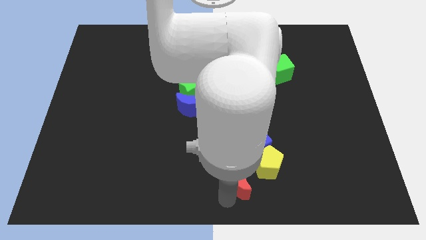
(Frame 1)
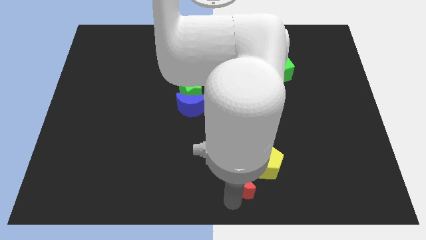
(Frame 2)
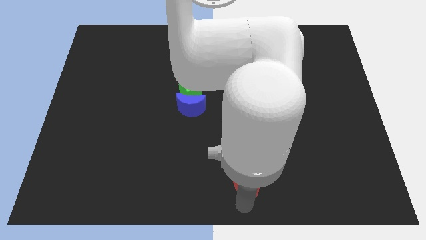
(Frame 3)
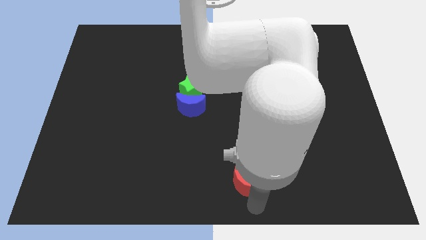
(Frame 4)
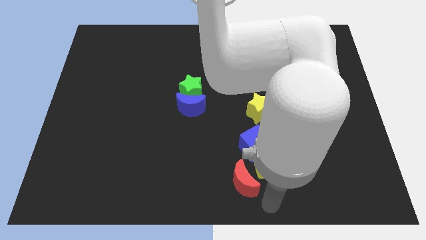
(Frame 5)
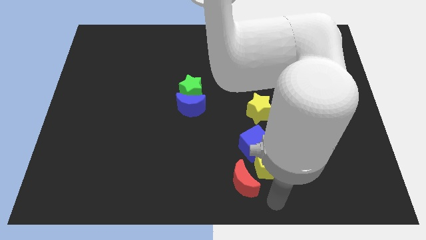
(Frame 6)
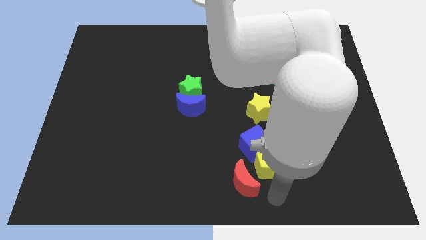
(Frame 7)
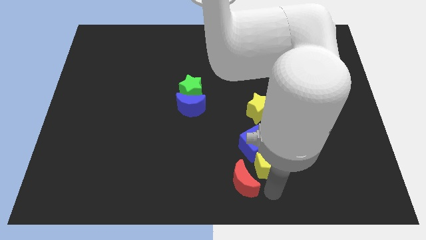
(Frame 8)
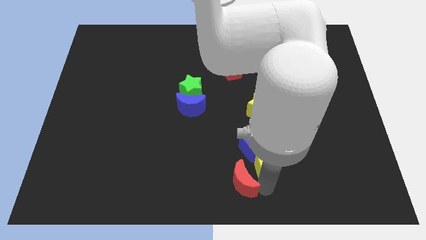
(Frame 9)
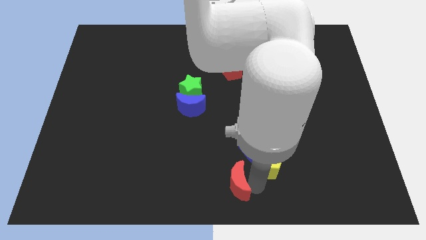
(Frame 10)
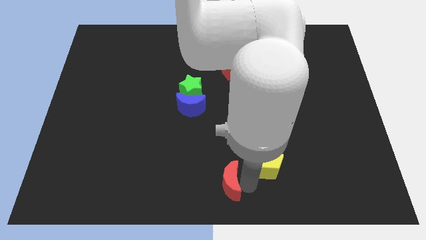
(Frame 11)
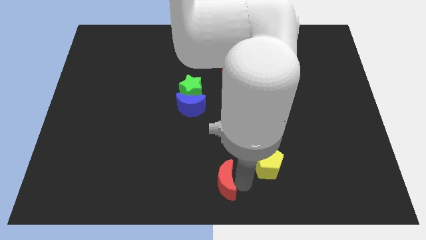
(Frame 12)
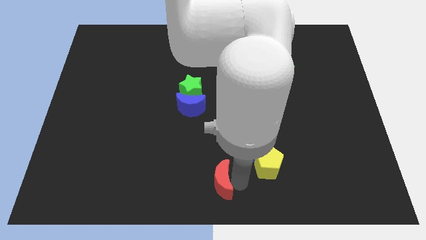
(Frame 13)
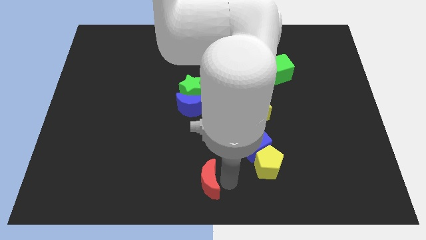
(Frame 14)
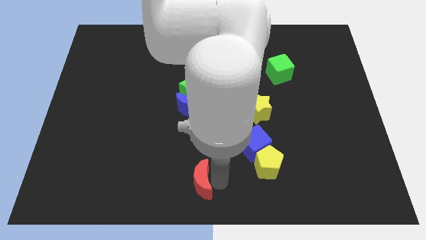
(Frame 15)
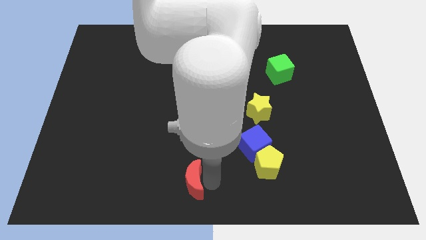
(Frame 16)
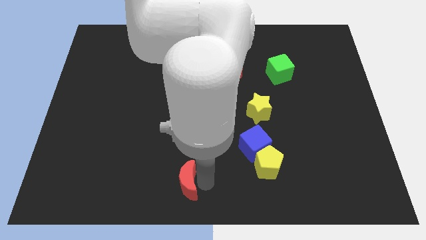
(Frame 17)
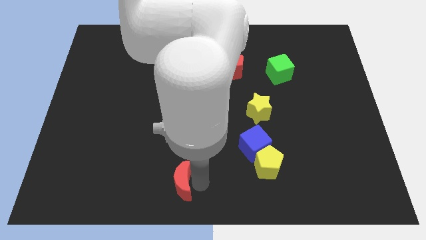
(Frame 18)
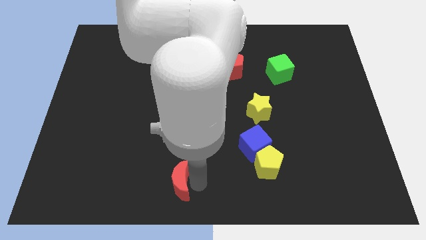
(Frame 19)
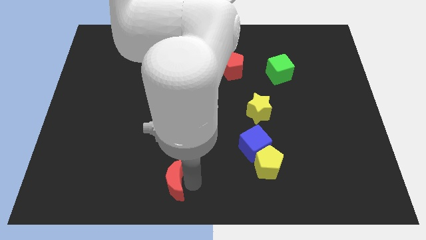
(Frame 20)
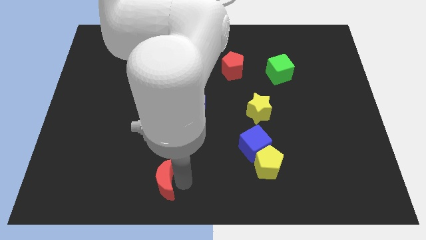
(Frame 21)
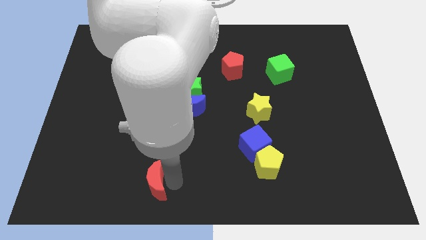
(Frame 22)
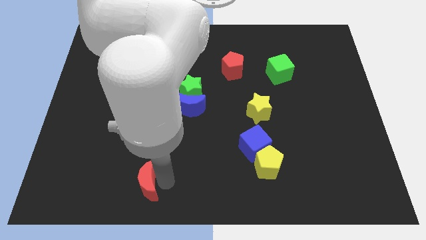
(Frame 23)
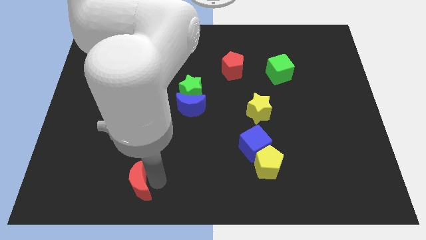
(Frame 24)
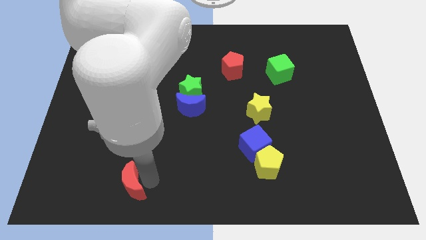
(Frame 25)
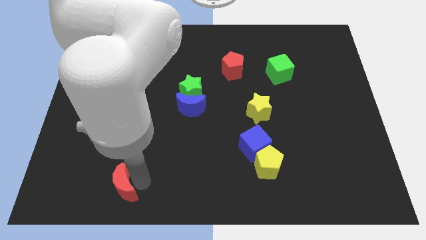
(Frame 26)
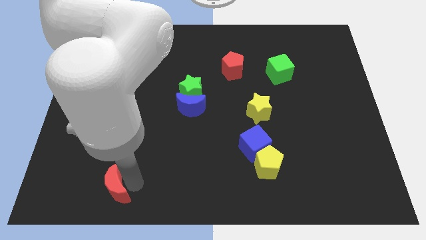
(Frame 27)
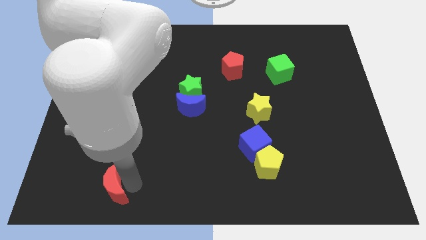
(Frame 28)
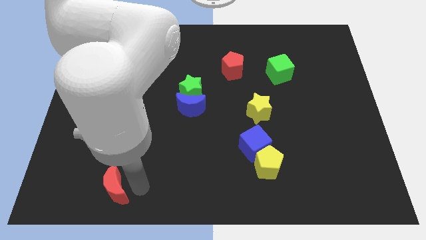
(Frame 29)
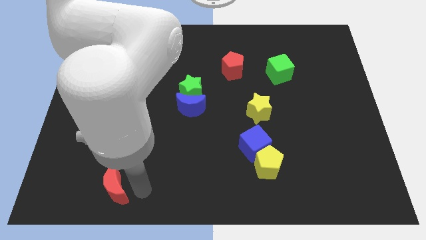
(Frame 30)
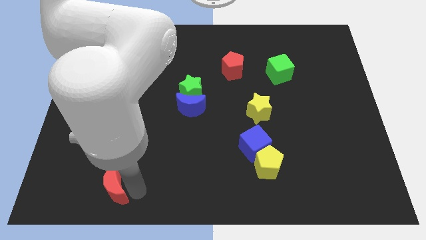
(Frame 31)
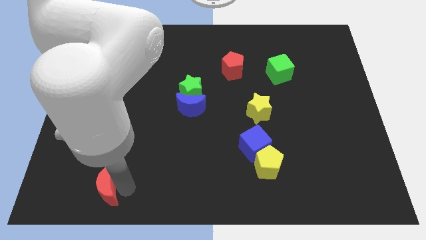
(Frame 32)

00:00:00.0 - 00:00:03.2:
push the red moon towards the left

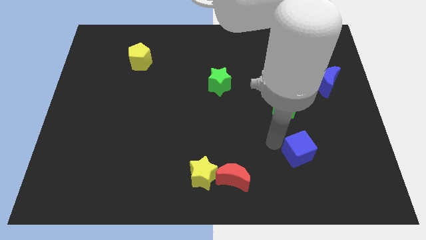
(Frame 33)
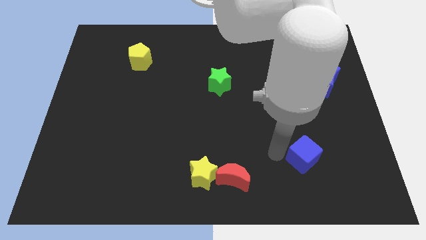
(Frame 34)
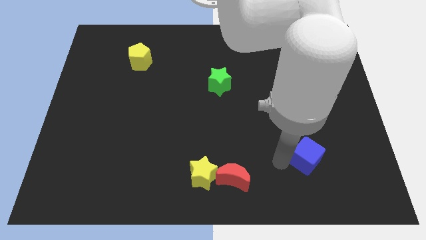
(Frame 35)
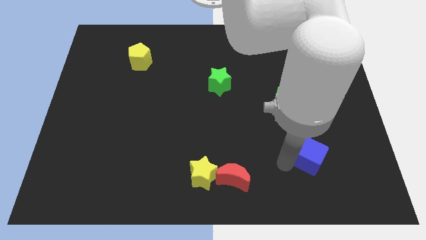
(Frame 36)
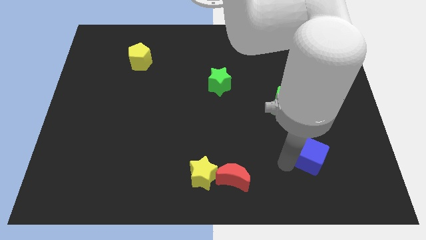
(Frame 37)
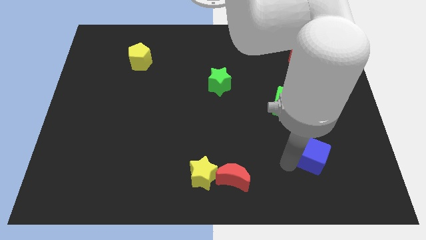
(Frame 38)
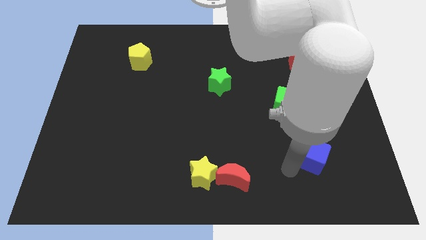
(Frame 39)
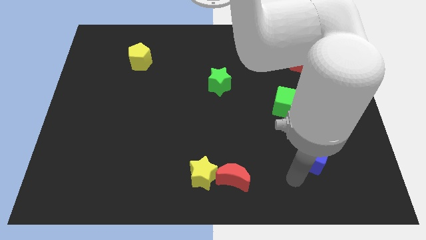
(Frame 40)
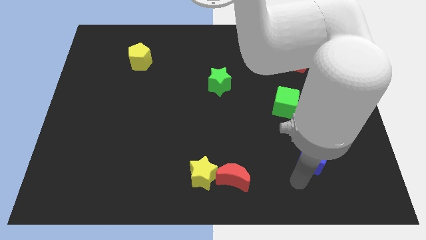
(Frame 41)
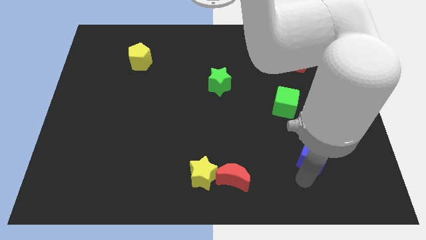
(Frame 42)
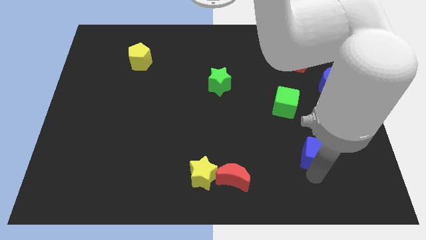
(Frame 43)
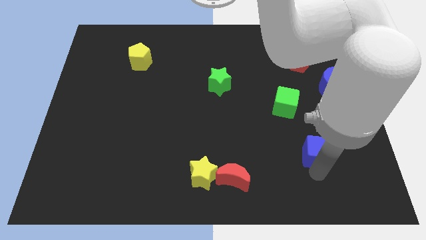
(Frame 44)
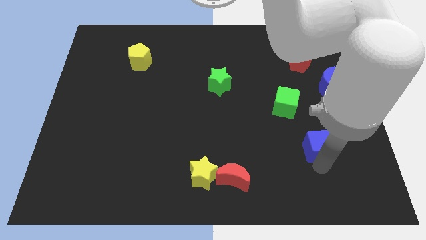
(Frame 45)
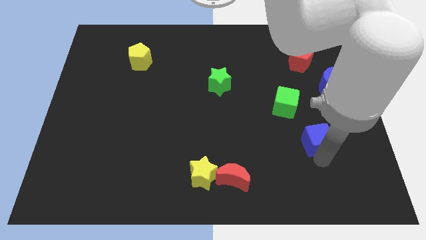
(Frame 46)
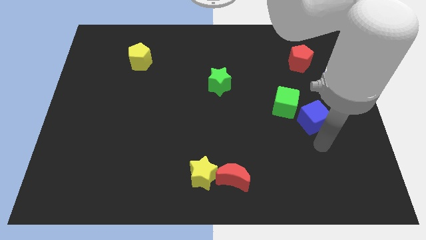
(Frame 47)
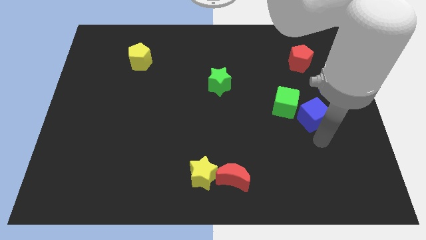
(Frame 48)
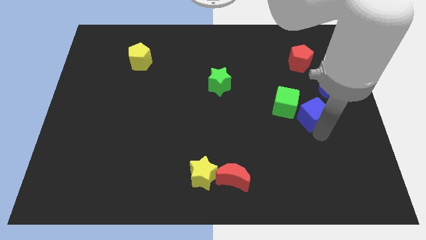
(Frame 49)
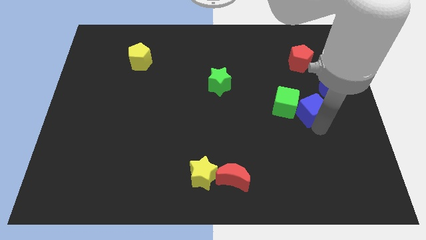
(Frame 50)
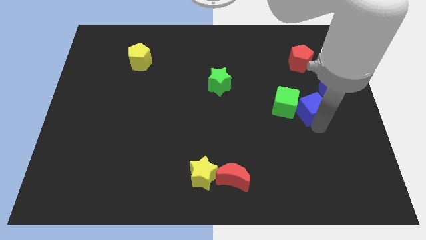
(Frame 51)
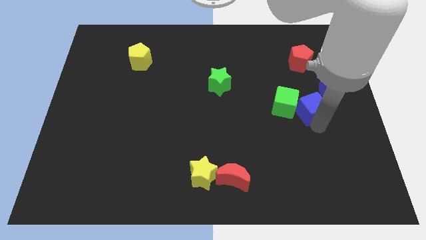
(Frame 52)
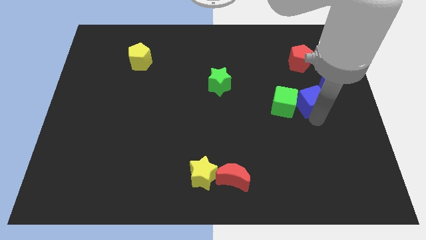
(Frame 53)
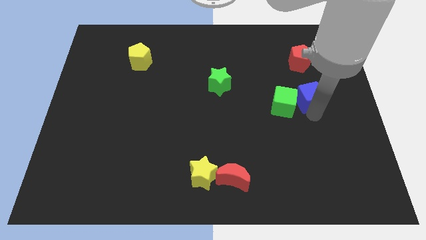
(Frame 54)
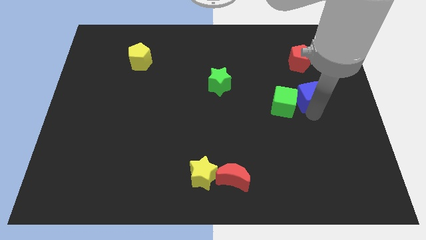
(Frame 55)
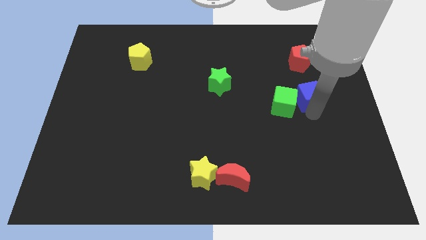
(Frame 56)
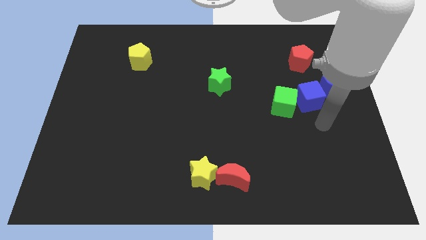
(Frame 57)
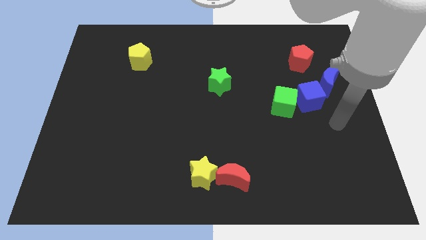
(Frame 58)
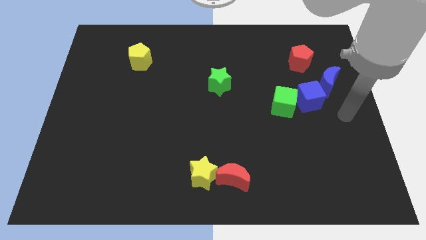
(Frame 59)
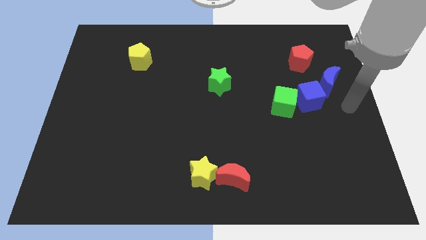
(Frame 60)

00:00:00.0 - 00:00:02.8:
place the blue cube in between the blue moon and the green cube

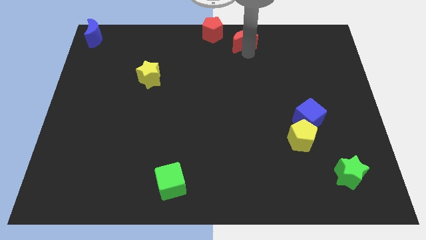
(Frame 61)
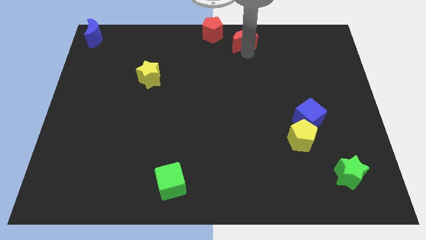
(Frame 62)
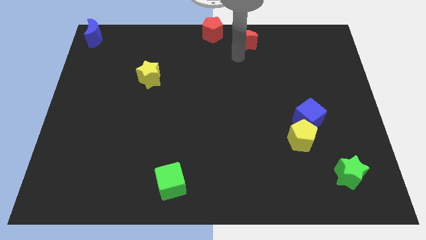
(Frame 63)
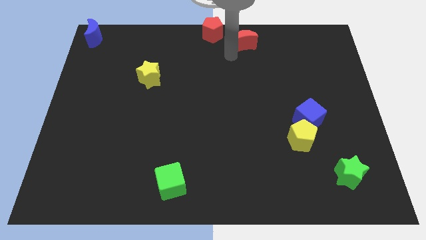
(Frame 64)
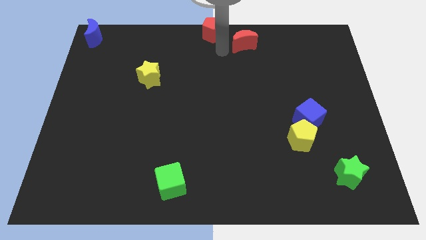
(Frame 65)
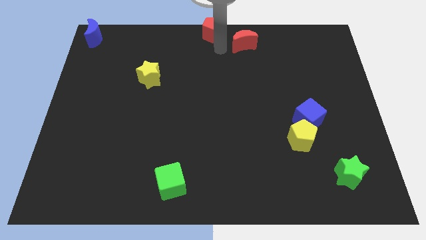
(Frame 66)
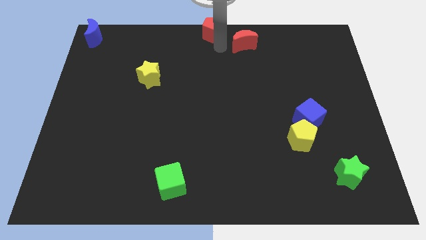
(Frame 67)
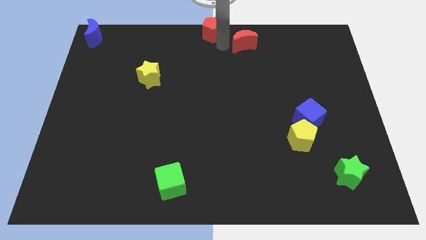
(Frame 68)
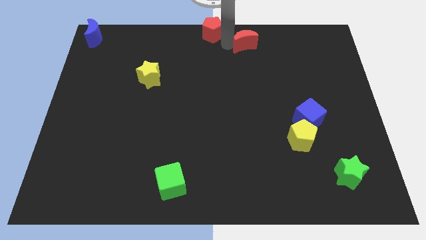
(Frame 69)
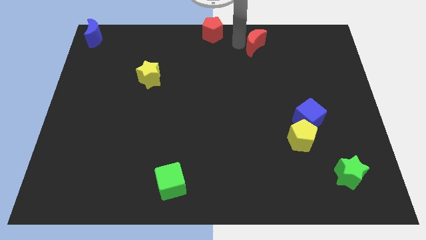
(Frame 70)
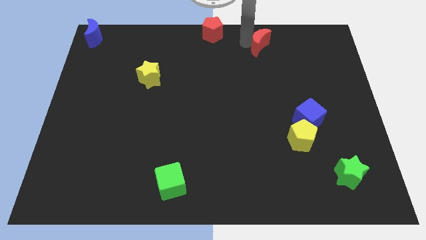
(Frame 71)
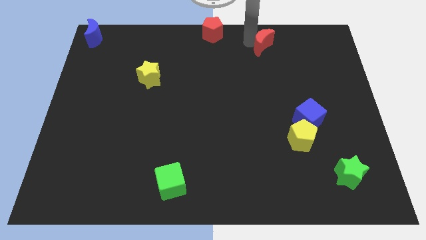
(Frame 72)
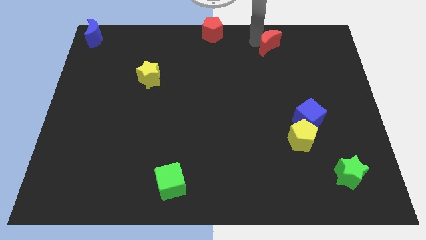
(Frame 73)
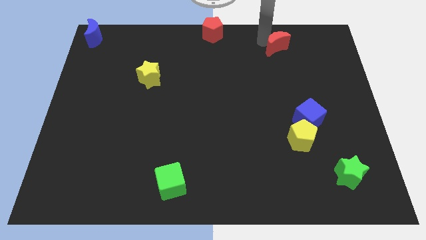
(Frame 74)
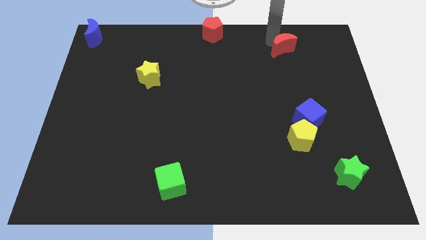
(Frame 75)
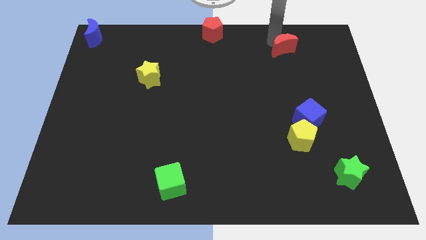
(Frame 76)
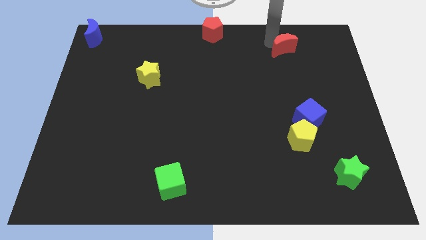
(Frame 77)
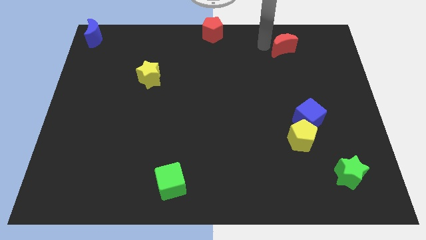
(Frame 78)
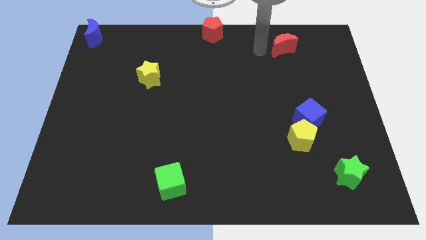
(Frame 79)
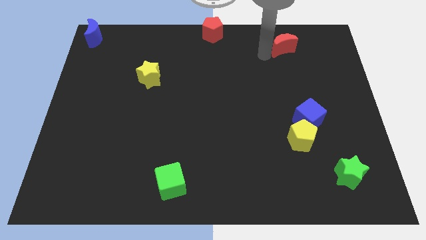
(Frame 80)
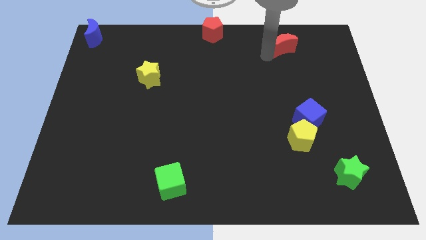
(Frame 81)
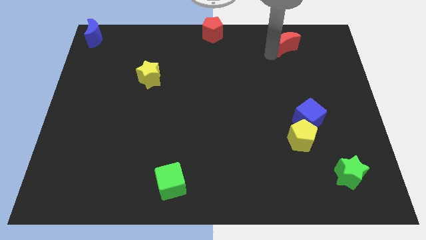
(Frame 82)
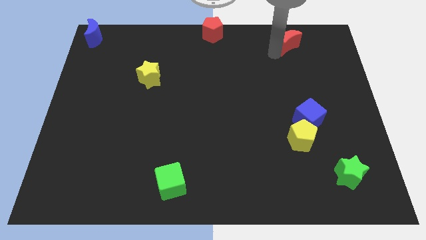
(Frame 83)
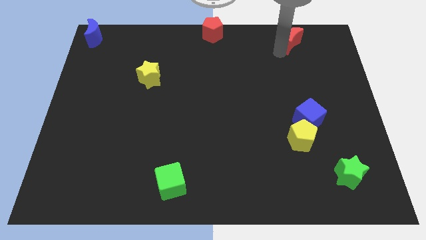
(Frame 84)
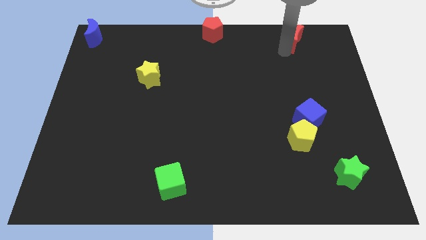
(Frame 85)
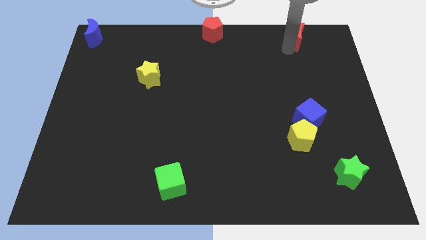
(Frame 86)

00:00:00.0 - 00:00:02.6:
move the red crescent to the top of the blue cube

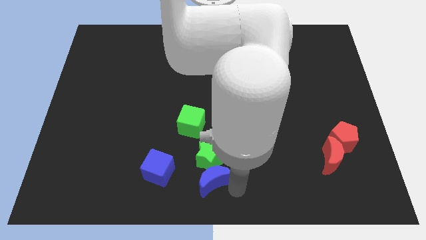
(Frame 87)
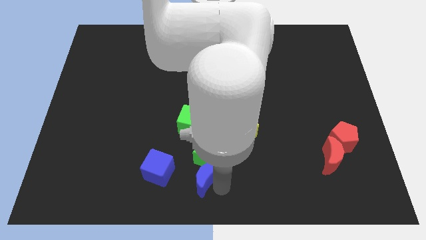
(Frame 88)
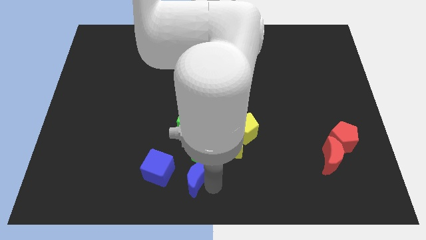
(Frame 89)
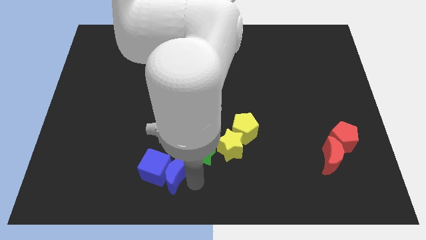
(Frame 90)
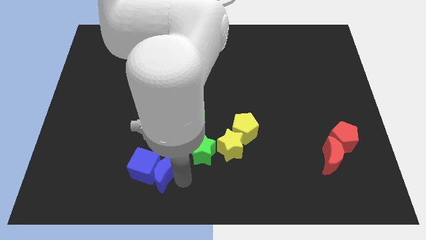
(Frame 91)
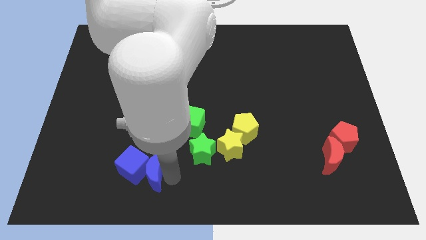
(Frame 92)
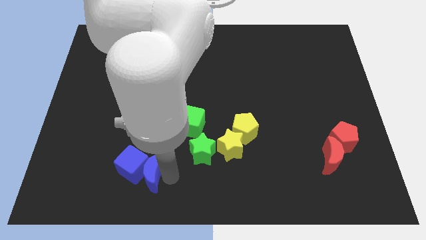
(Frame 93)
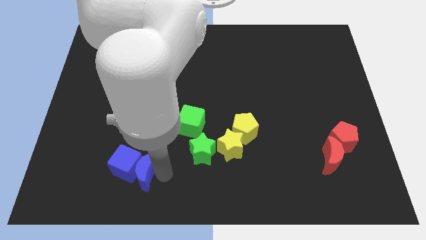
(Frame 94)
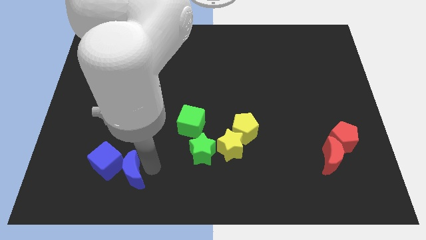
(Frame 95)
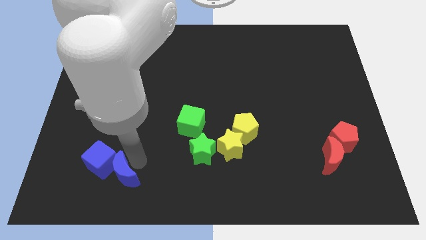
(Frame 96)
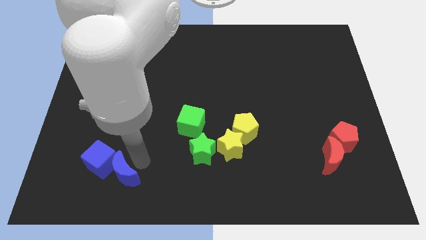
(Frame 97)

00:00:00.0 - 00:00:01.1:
push the blue moon into the blue cube
